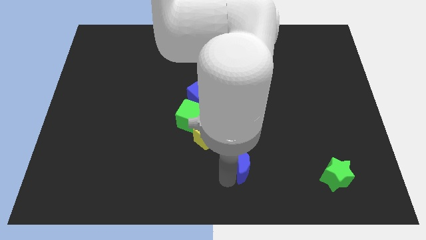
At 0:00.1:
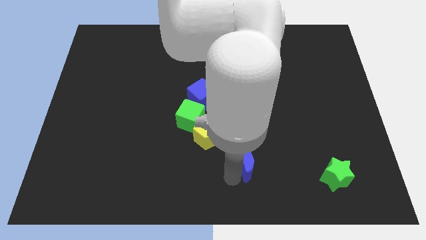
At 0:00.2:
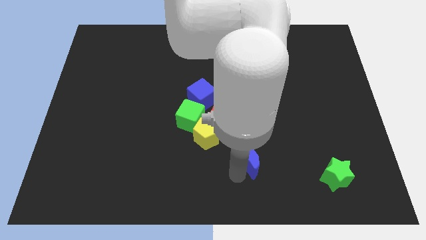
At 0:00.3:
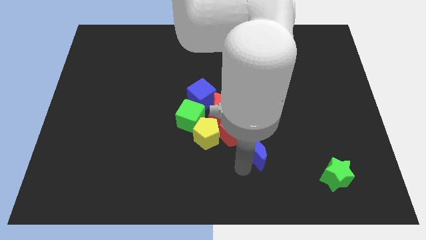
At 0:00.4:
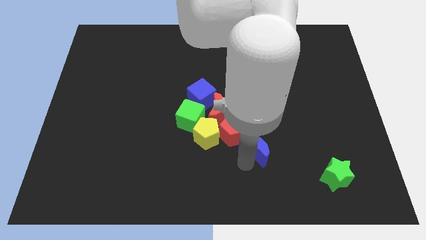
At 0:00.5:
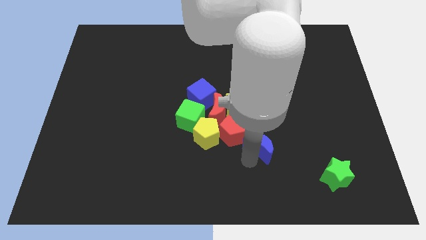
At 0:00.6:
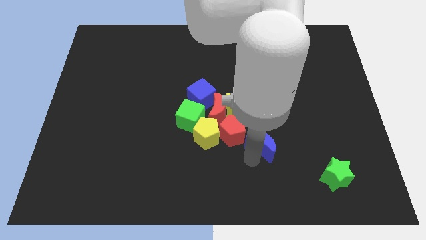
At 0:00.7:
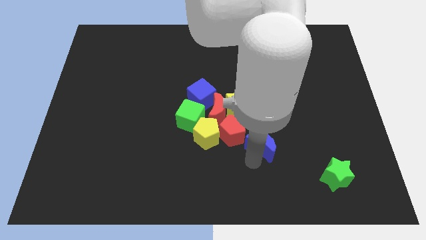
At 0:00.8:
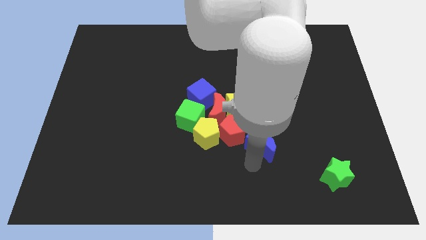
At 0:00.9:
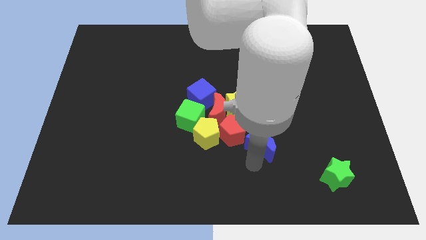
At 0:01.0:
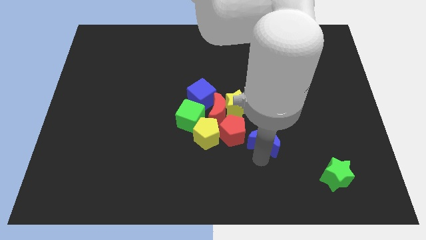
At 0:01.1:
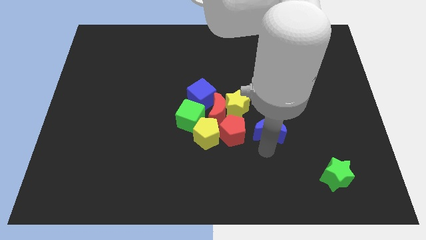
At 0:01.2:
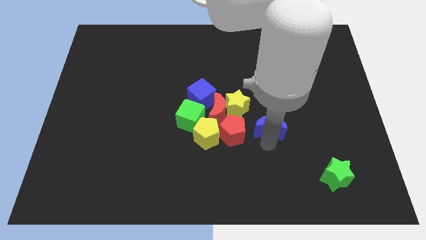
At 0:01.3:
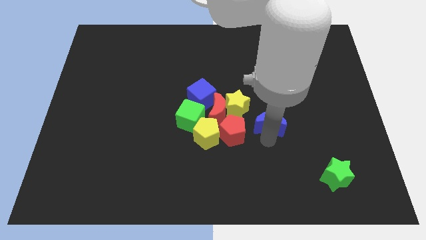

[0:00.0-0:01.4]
place the blue crescent horizontal to the red pentagon

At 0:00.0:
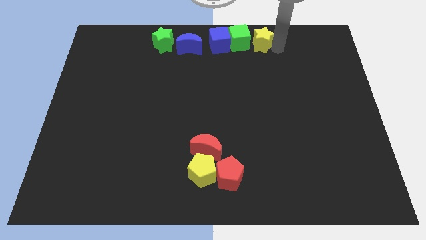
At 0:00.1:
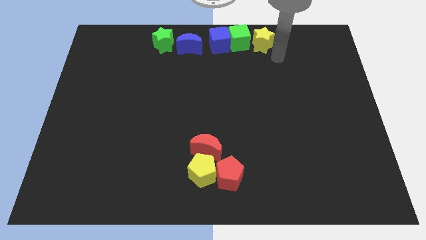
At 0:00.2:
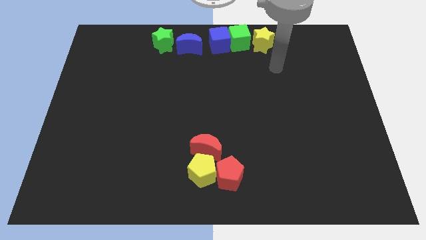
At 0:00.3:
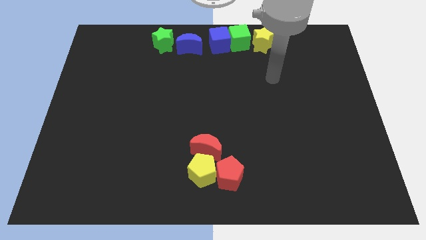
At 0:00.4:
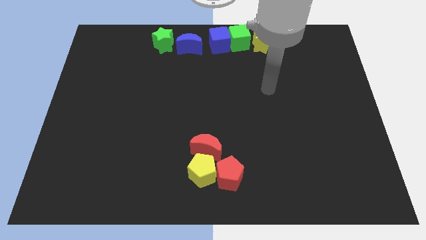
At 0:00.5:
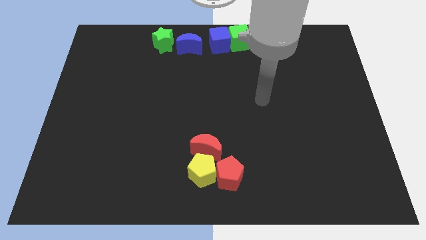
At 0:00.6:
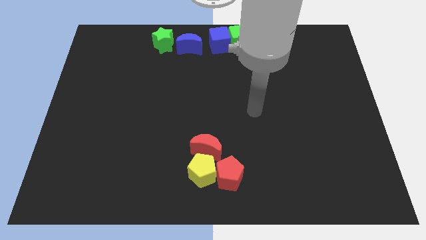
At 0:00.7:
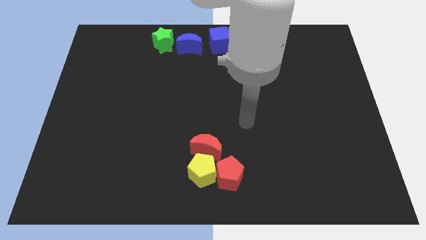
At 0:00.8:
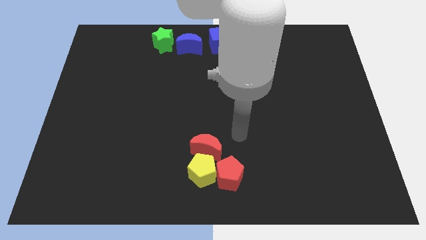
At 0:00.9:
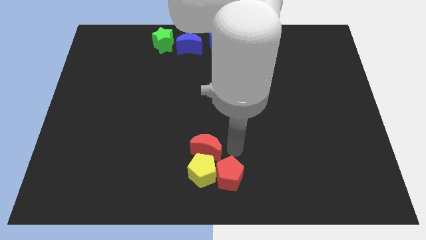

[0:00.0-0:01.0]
move away from the yellow star

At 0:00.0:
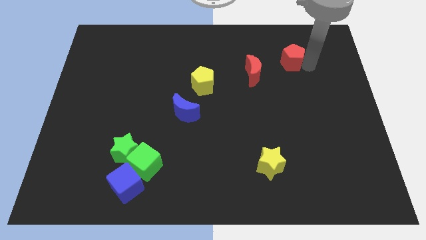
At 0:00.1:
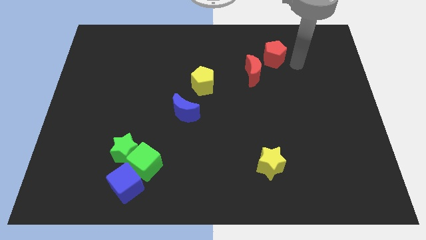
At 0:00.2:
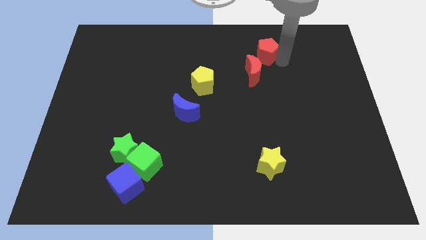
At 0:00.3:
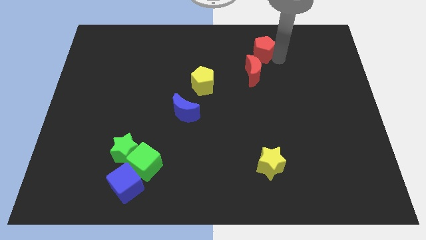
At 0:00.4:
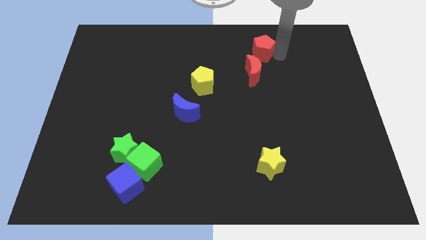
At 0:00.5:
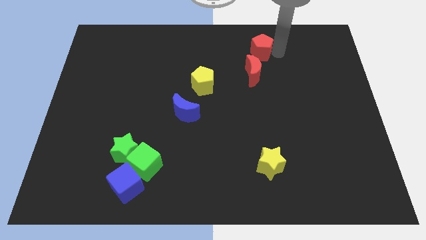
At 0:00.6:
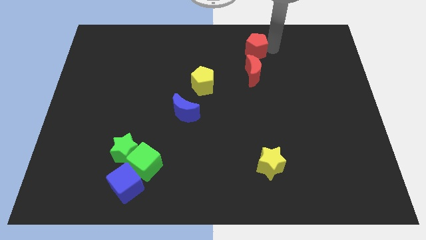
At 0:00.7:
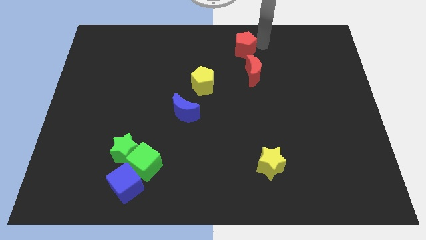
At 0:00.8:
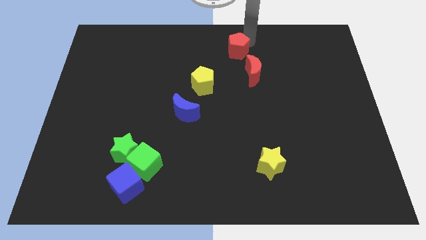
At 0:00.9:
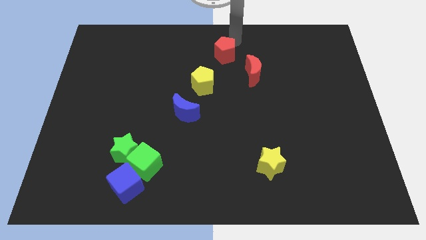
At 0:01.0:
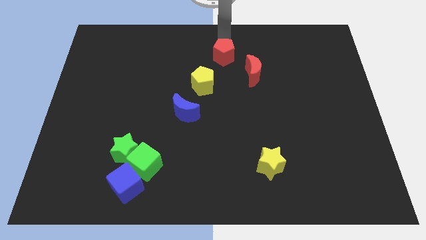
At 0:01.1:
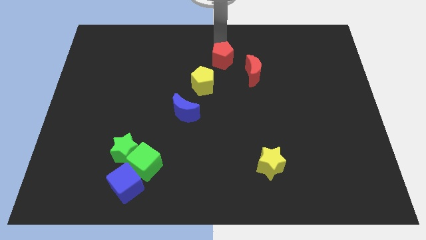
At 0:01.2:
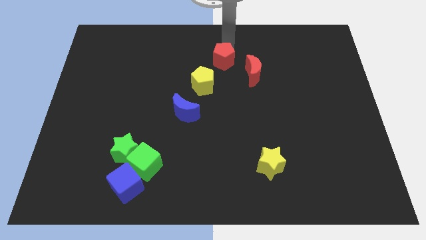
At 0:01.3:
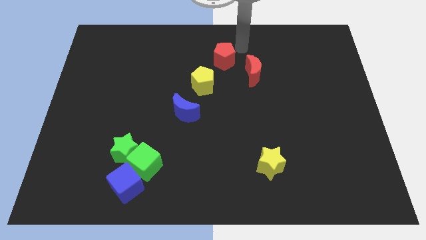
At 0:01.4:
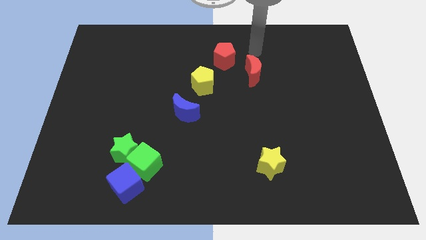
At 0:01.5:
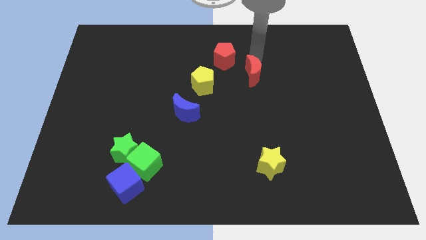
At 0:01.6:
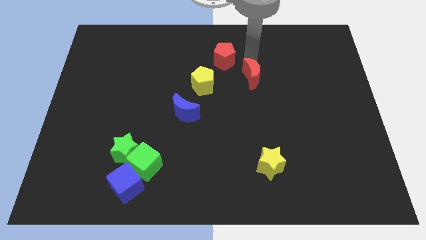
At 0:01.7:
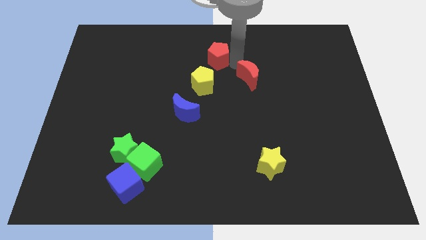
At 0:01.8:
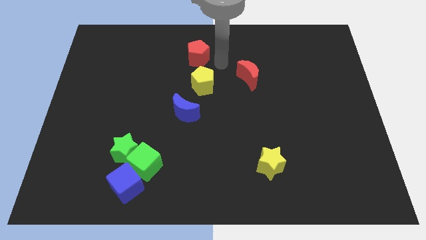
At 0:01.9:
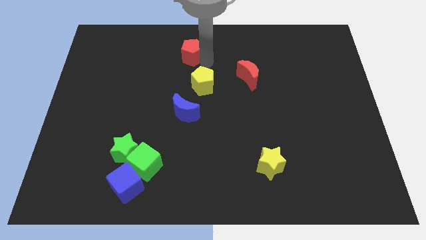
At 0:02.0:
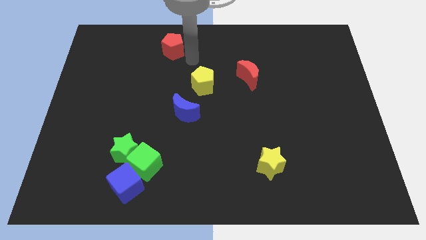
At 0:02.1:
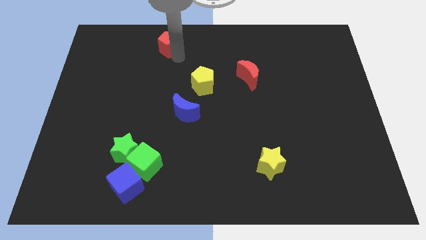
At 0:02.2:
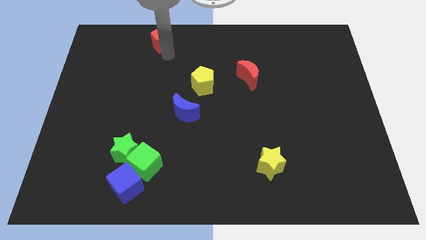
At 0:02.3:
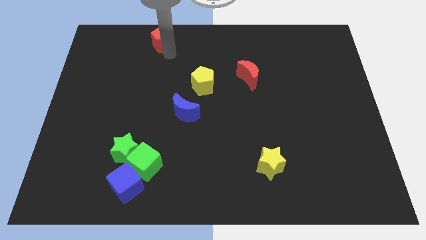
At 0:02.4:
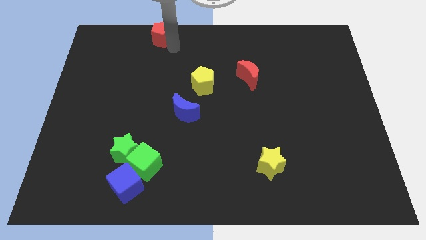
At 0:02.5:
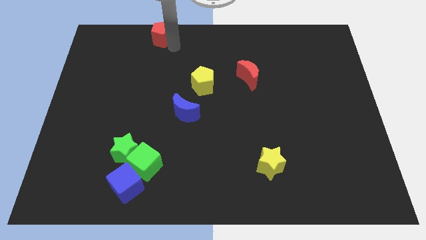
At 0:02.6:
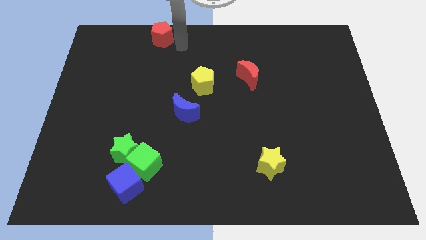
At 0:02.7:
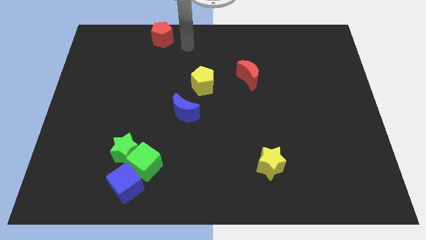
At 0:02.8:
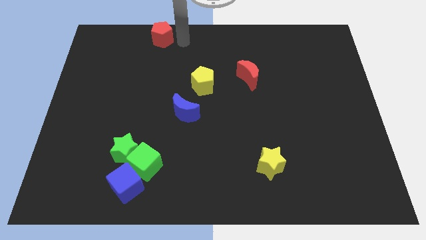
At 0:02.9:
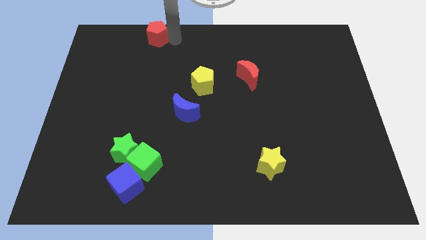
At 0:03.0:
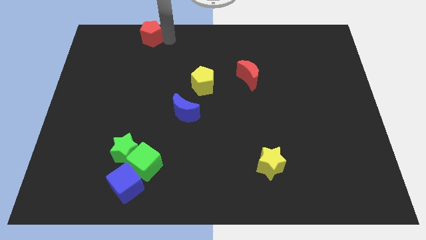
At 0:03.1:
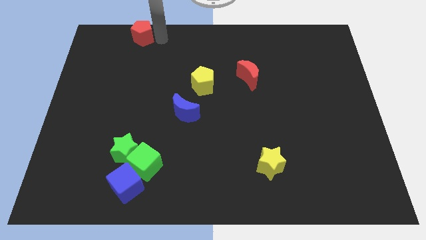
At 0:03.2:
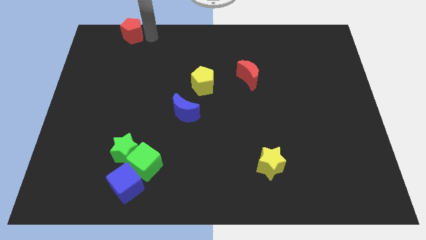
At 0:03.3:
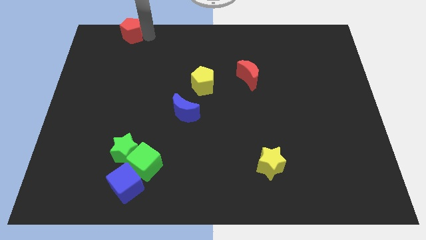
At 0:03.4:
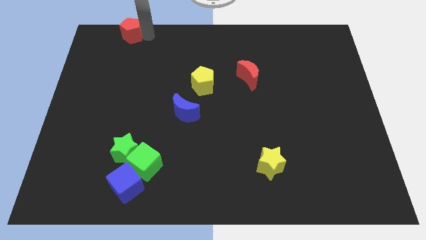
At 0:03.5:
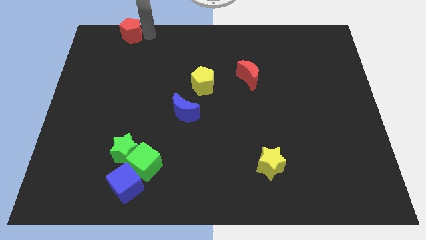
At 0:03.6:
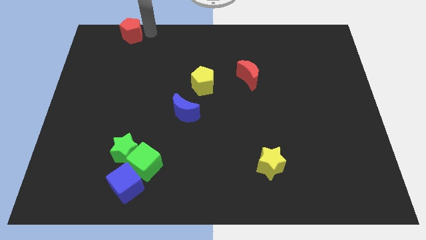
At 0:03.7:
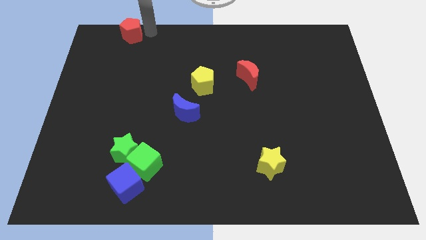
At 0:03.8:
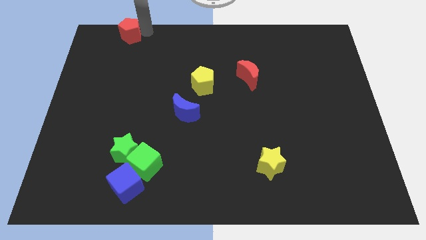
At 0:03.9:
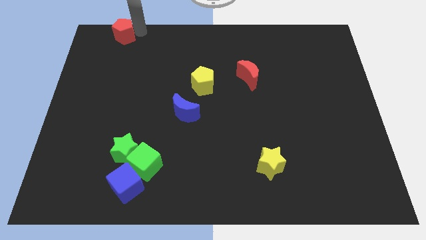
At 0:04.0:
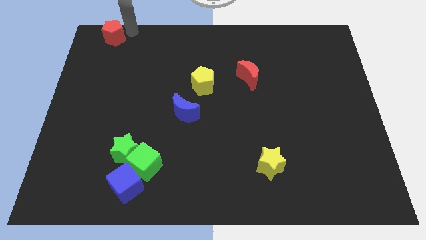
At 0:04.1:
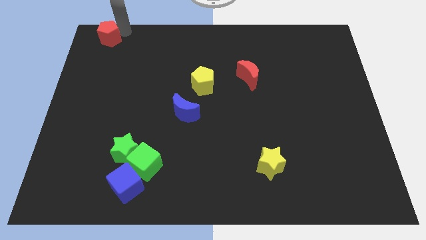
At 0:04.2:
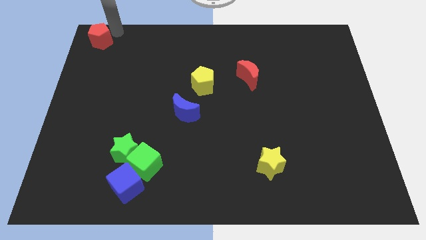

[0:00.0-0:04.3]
push the red pentagon to the top left corner of the board

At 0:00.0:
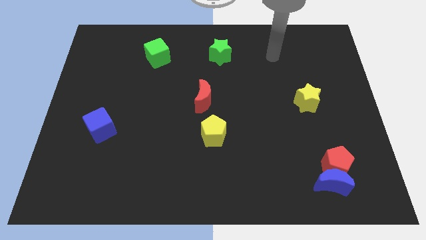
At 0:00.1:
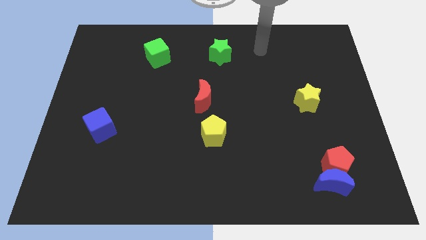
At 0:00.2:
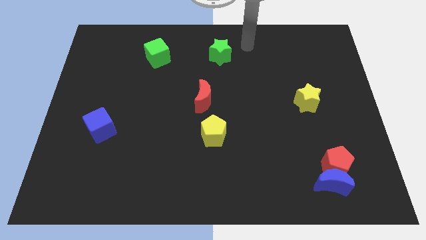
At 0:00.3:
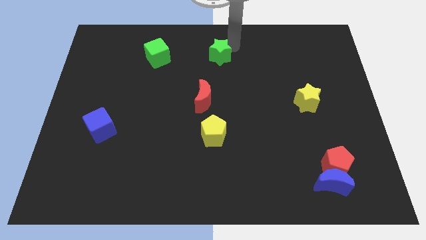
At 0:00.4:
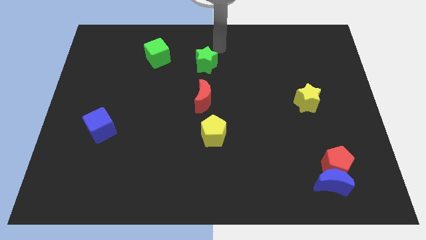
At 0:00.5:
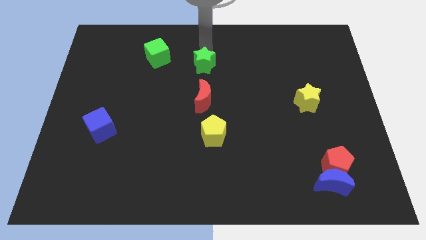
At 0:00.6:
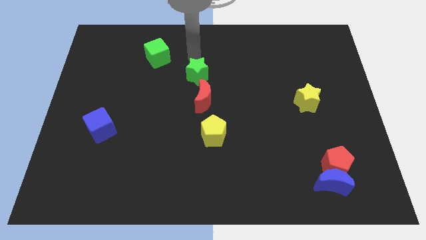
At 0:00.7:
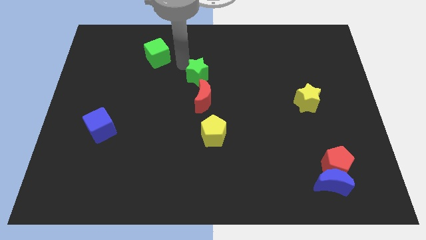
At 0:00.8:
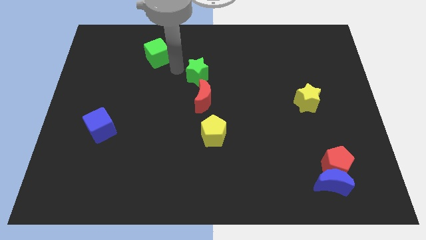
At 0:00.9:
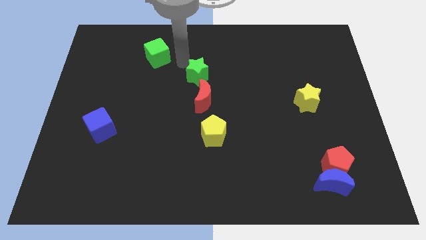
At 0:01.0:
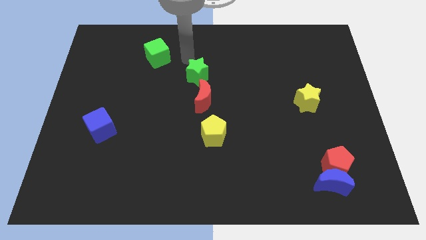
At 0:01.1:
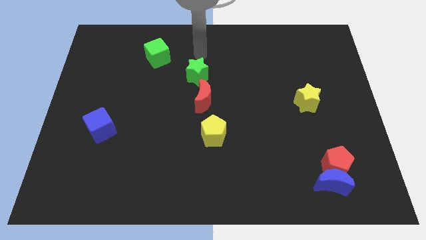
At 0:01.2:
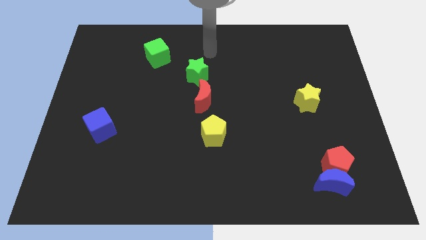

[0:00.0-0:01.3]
move the green star above to the red crescent

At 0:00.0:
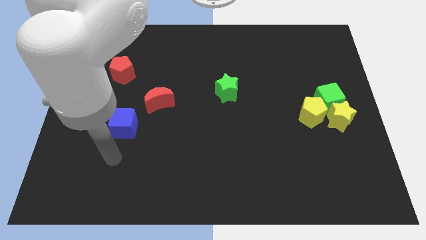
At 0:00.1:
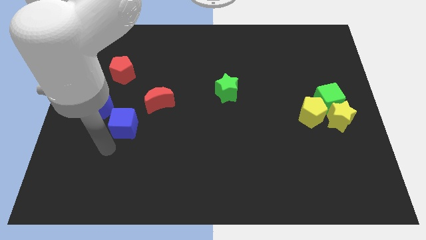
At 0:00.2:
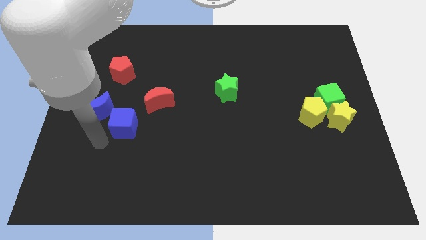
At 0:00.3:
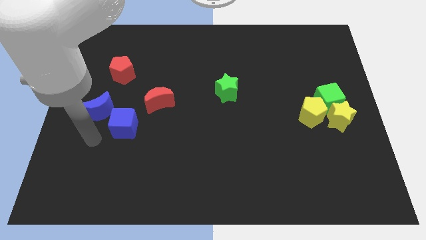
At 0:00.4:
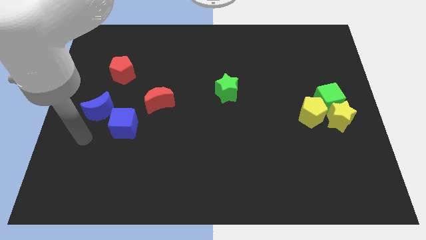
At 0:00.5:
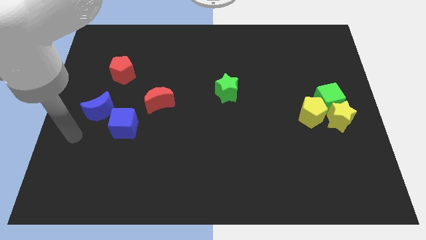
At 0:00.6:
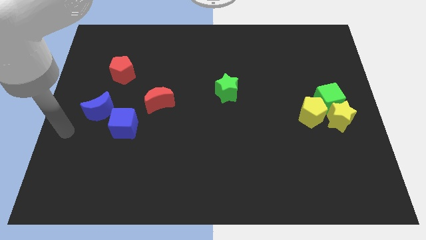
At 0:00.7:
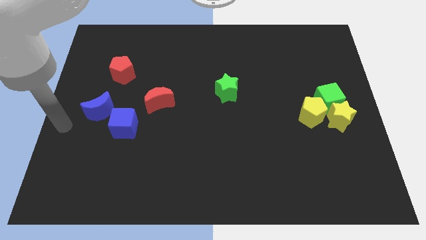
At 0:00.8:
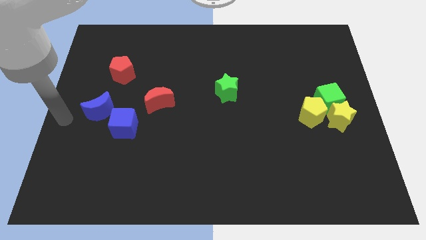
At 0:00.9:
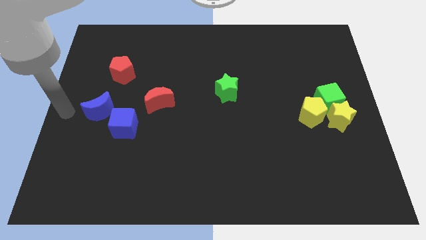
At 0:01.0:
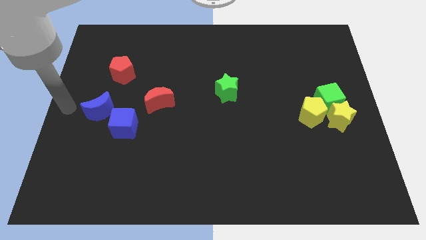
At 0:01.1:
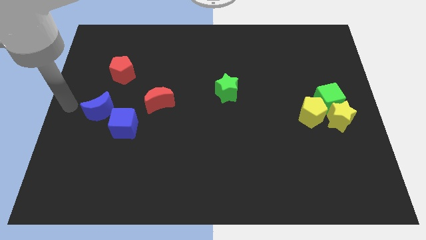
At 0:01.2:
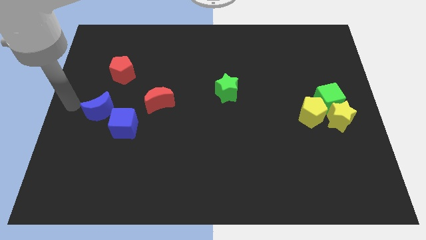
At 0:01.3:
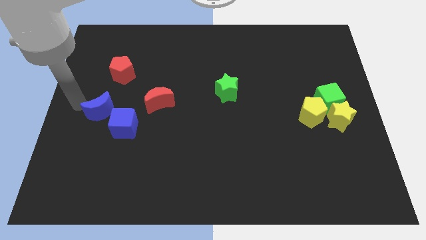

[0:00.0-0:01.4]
place your arm at the center left side of the board
